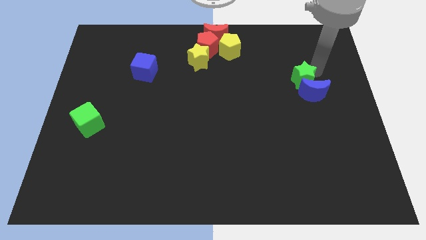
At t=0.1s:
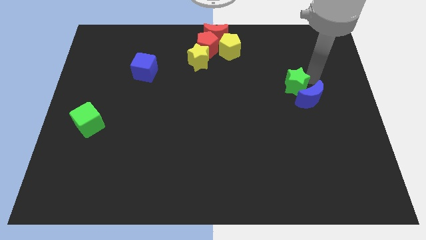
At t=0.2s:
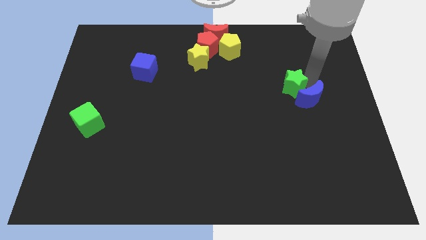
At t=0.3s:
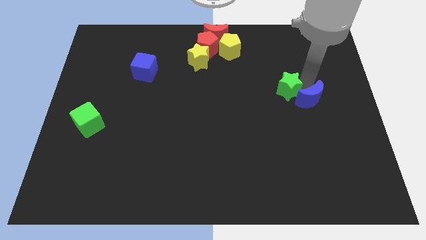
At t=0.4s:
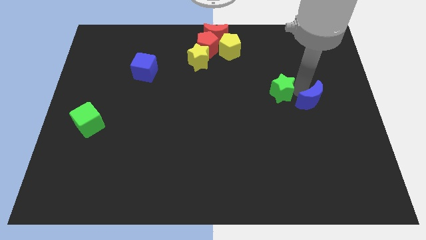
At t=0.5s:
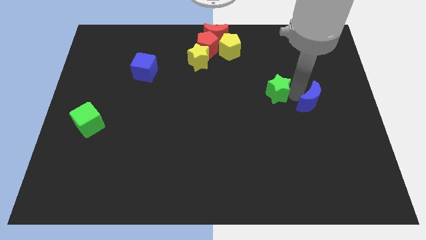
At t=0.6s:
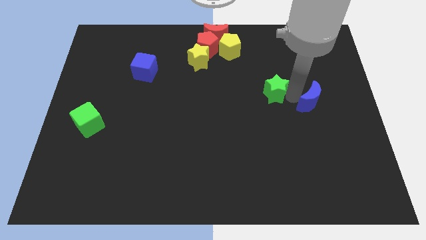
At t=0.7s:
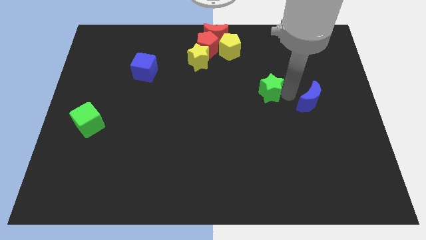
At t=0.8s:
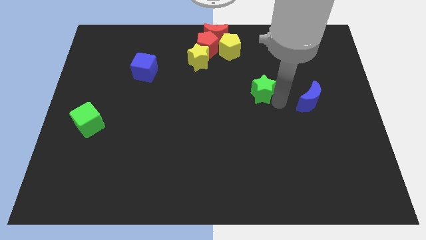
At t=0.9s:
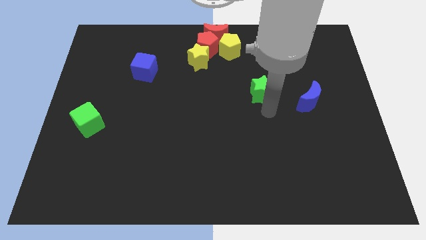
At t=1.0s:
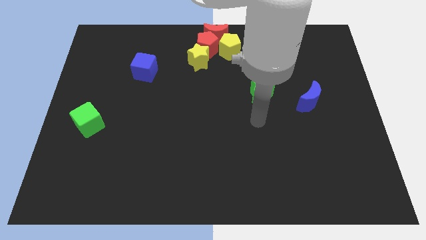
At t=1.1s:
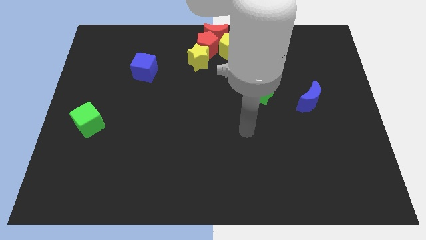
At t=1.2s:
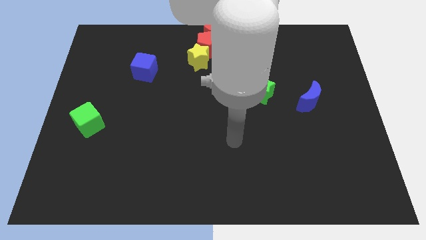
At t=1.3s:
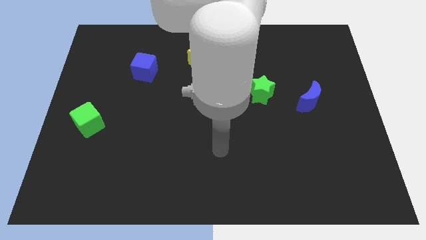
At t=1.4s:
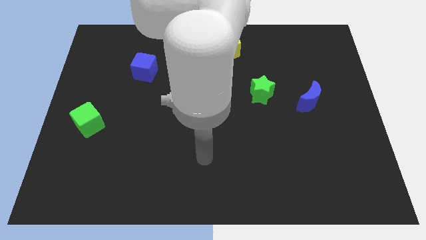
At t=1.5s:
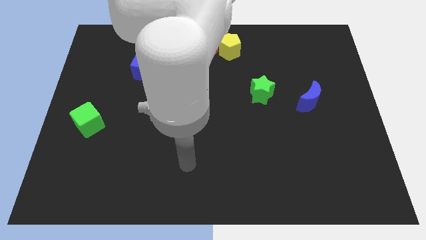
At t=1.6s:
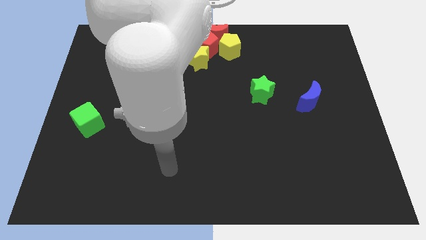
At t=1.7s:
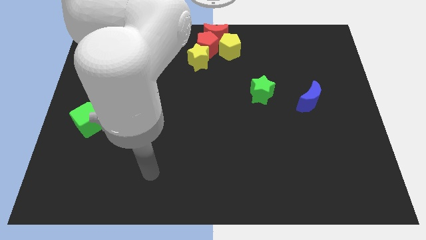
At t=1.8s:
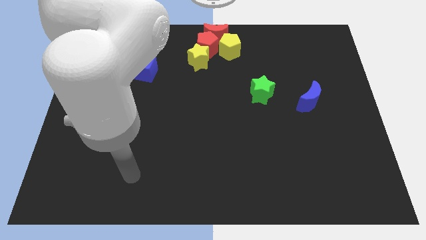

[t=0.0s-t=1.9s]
apart green star and blue crescent

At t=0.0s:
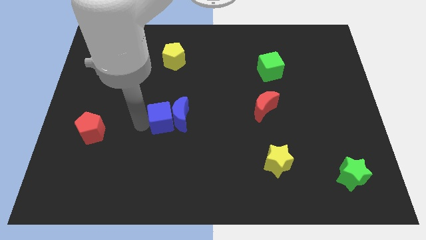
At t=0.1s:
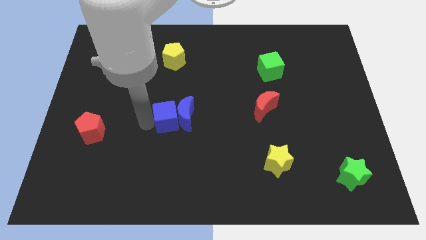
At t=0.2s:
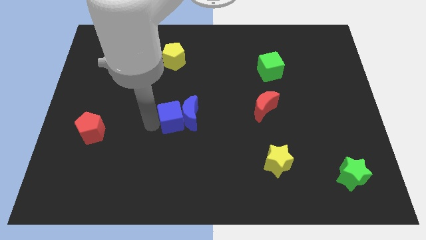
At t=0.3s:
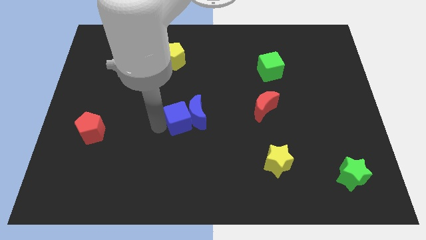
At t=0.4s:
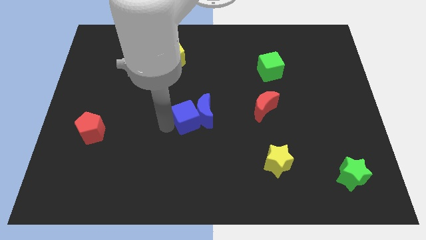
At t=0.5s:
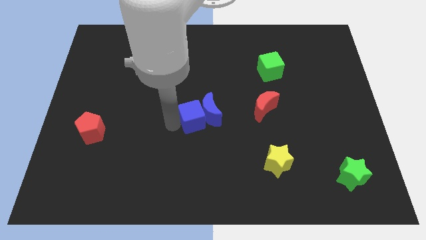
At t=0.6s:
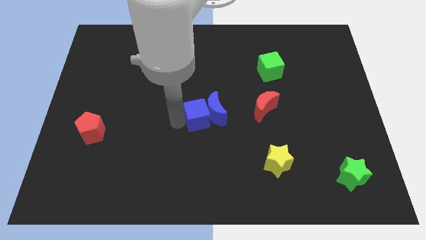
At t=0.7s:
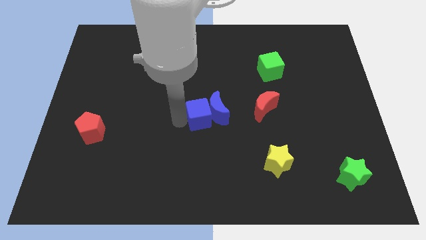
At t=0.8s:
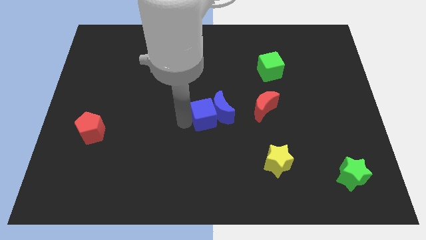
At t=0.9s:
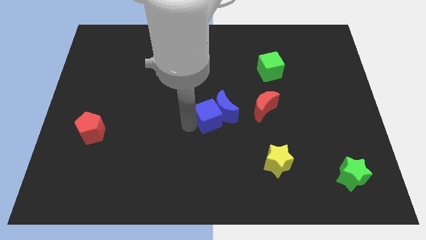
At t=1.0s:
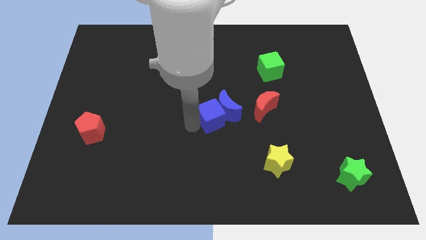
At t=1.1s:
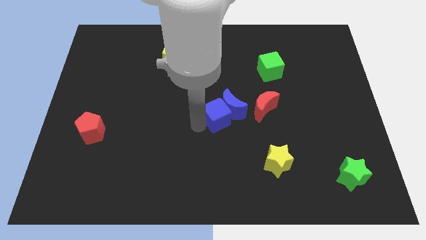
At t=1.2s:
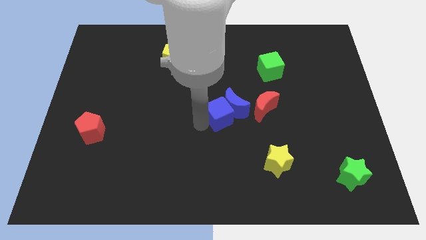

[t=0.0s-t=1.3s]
push the blue crescent with the blue cube towards the center of the board

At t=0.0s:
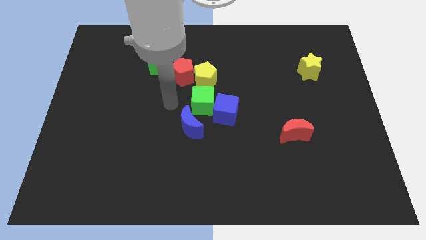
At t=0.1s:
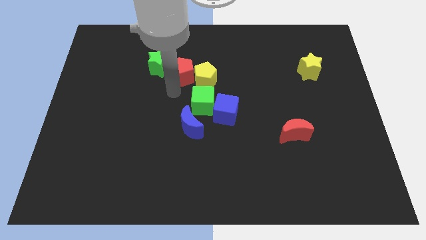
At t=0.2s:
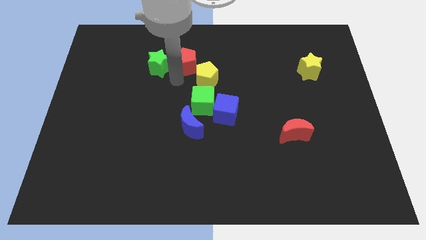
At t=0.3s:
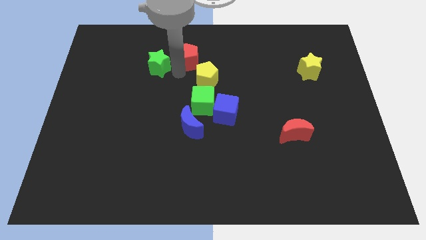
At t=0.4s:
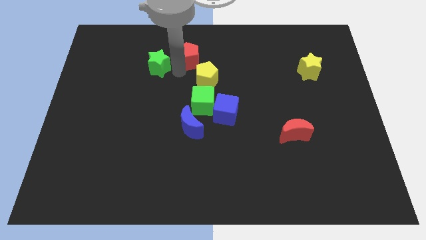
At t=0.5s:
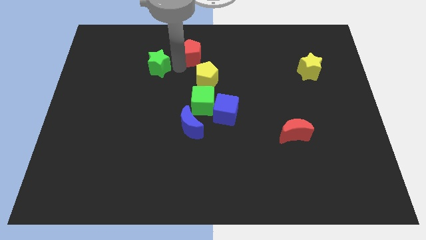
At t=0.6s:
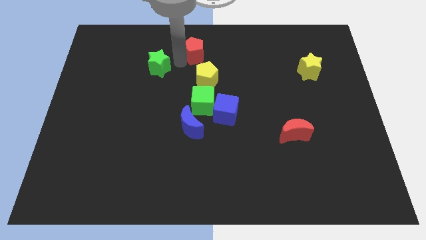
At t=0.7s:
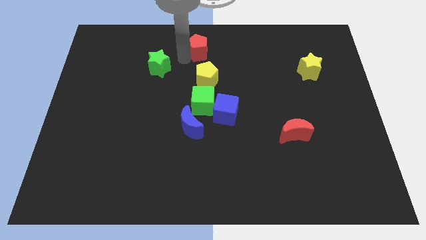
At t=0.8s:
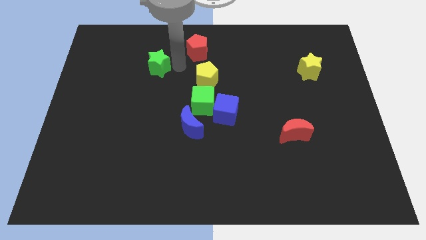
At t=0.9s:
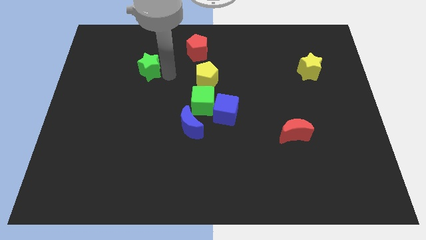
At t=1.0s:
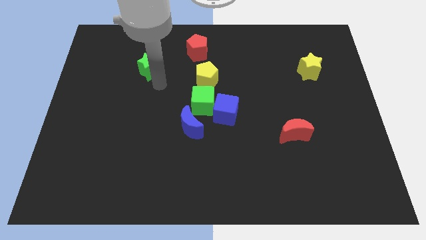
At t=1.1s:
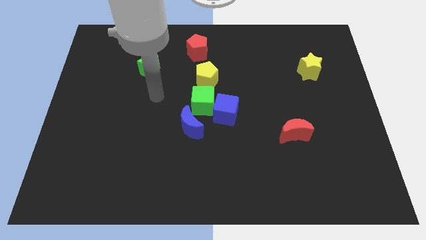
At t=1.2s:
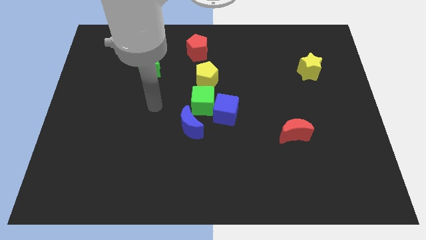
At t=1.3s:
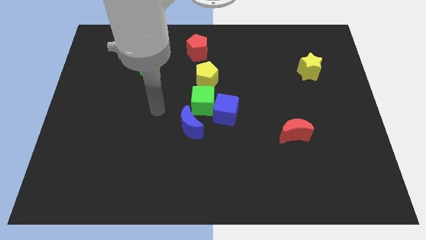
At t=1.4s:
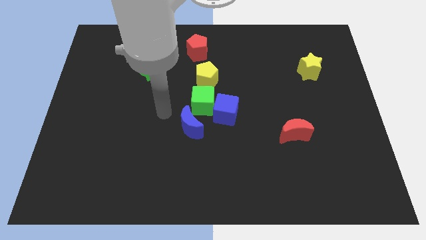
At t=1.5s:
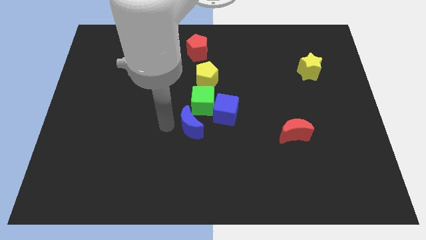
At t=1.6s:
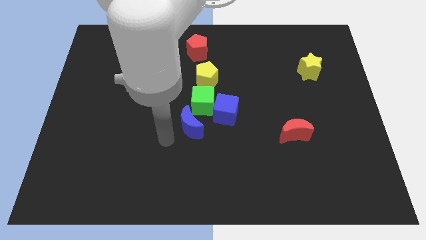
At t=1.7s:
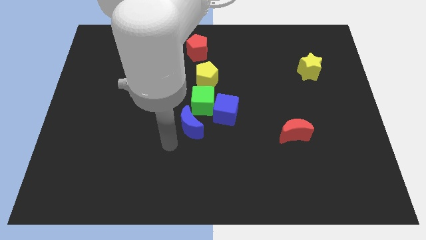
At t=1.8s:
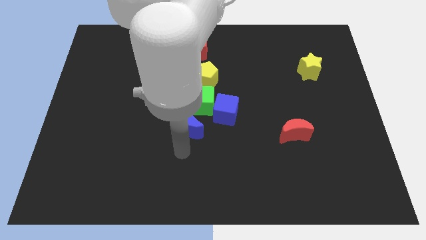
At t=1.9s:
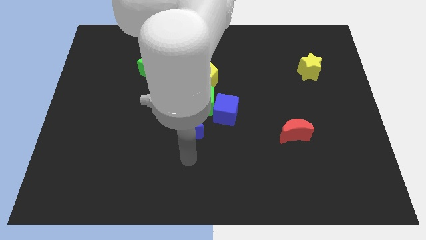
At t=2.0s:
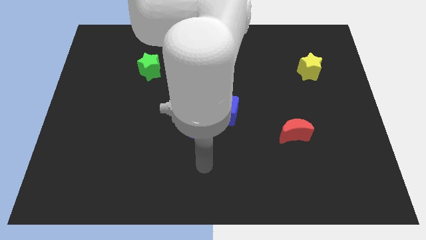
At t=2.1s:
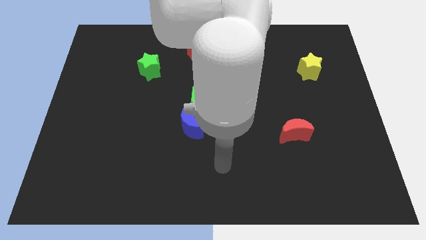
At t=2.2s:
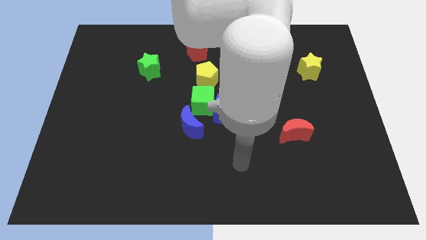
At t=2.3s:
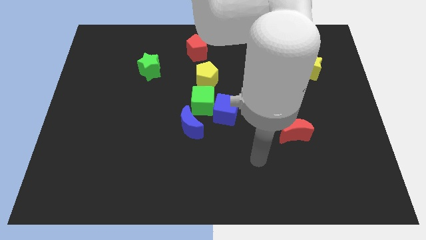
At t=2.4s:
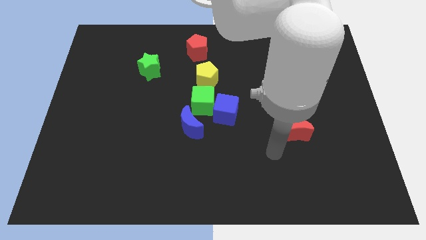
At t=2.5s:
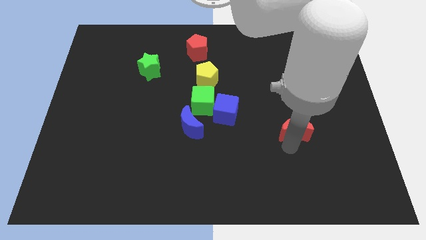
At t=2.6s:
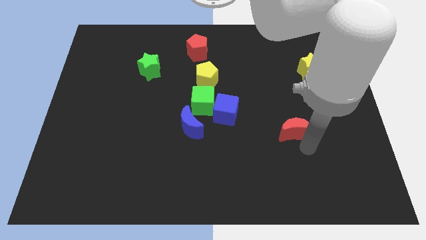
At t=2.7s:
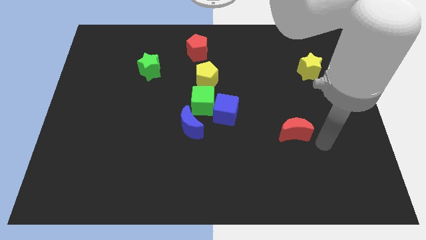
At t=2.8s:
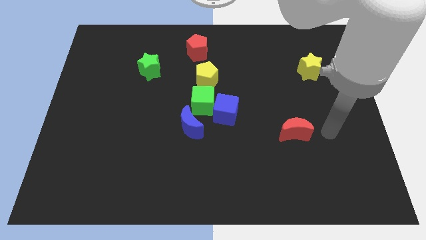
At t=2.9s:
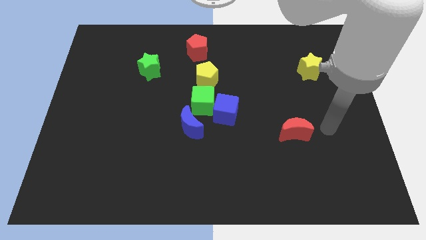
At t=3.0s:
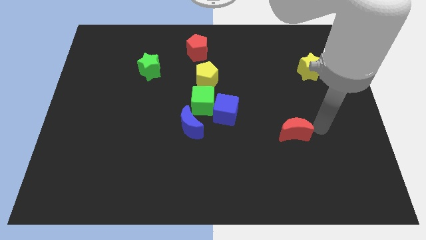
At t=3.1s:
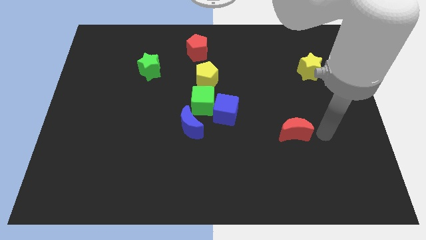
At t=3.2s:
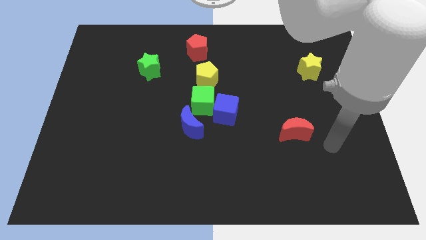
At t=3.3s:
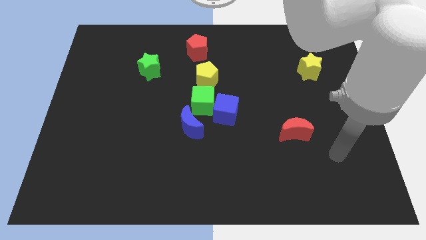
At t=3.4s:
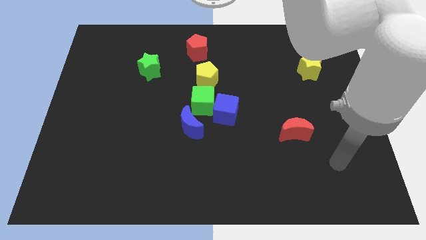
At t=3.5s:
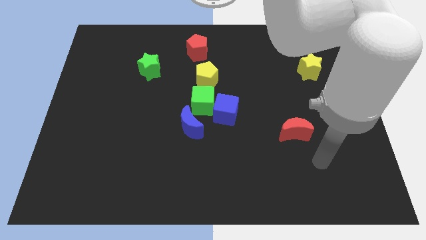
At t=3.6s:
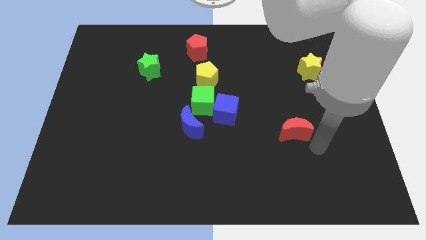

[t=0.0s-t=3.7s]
slide the red pentagon towards the top center of the board

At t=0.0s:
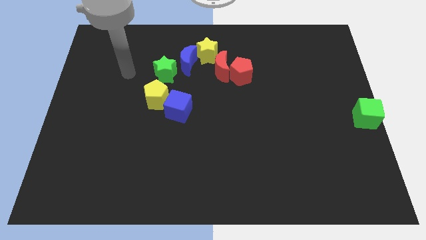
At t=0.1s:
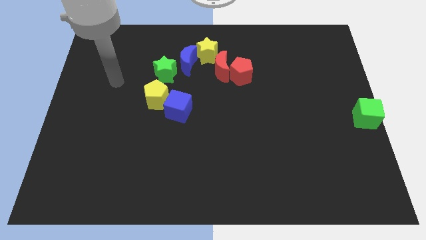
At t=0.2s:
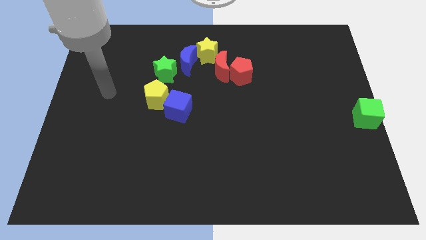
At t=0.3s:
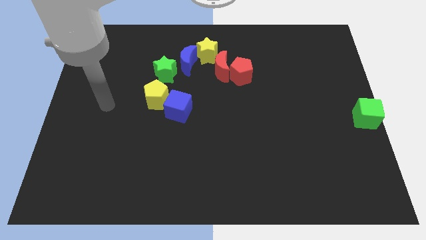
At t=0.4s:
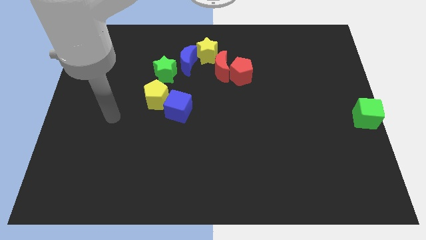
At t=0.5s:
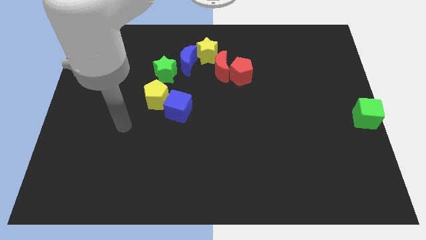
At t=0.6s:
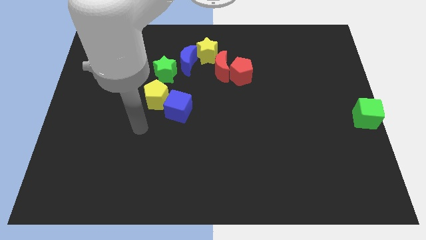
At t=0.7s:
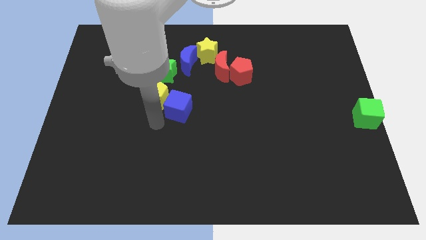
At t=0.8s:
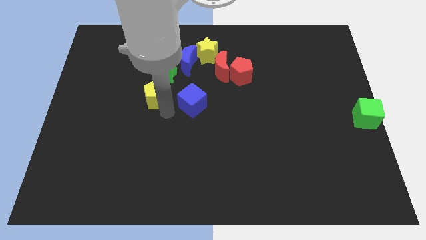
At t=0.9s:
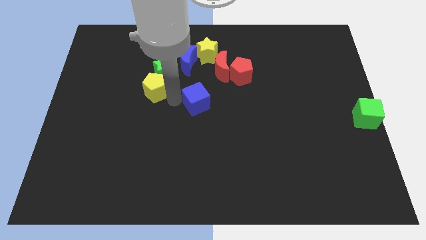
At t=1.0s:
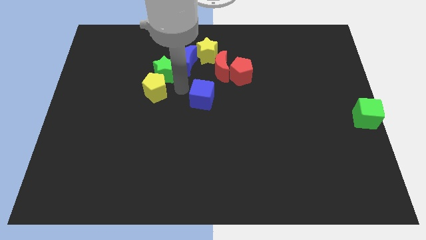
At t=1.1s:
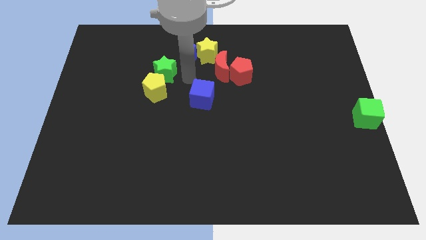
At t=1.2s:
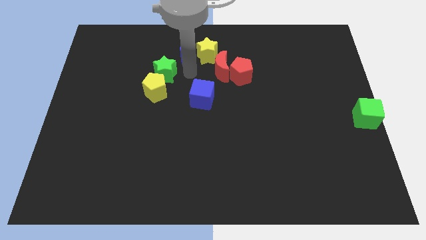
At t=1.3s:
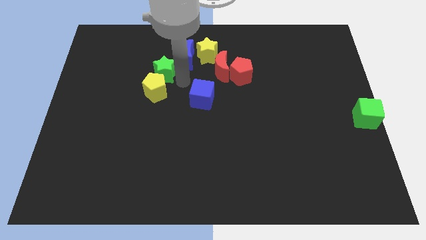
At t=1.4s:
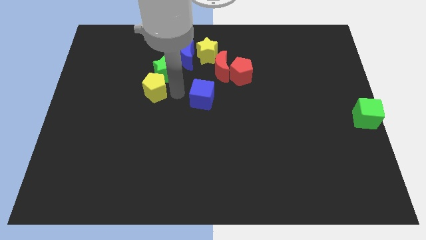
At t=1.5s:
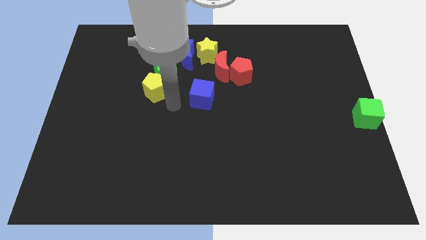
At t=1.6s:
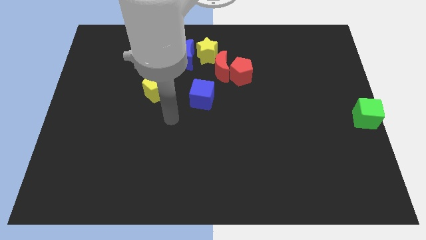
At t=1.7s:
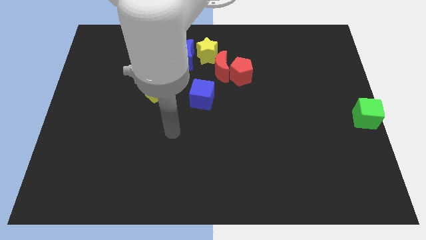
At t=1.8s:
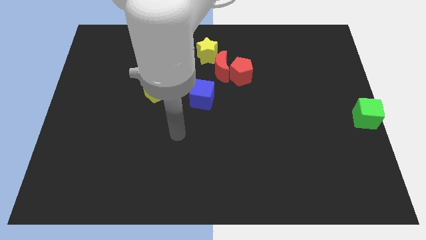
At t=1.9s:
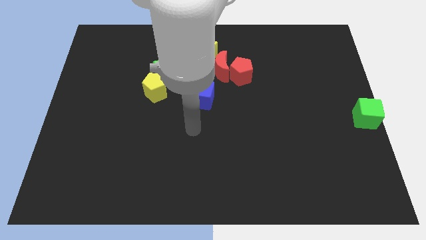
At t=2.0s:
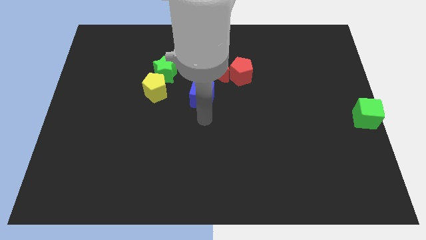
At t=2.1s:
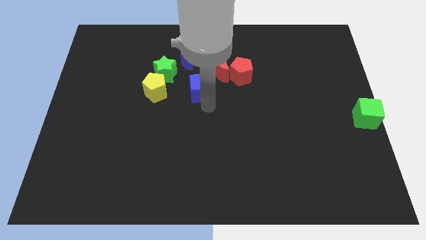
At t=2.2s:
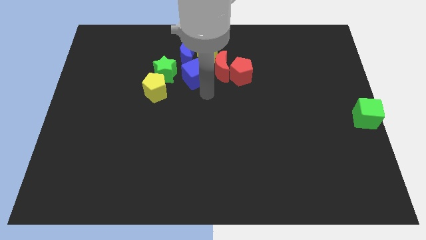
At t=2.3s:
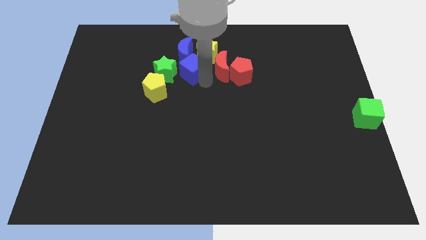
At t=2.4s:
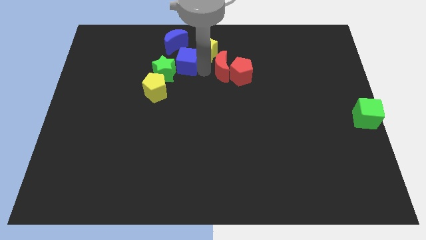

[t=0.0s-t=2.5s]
push the blue cube into the blue moon
